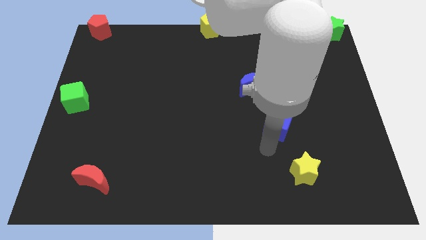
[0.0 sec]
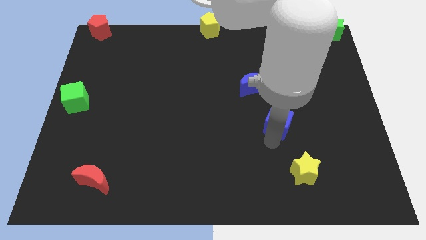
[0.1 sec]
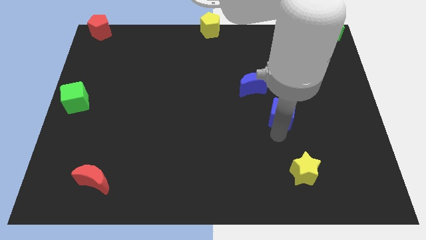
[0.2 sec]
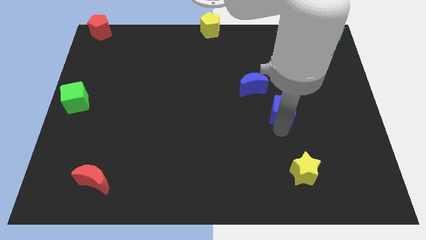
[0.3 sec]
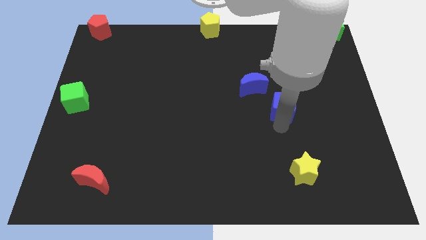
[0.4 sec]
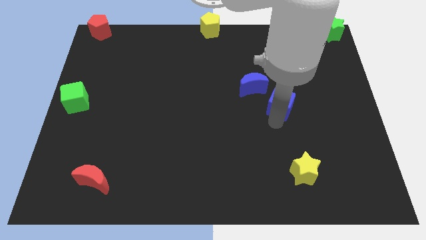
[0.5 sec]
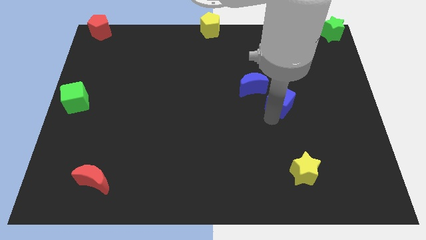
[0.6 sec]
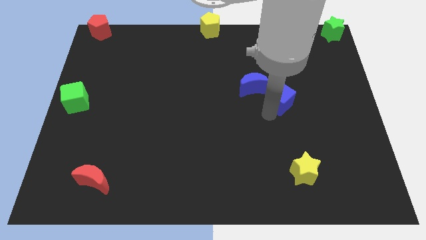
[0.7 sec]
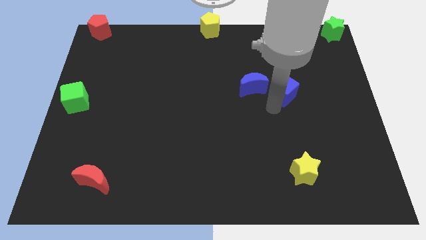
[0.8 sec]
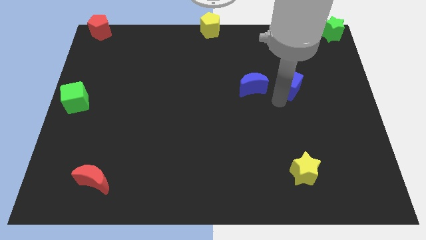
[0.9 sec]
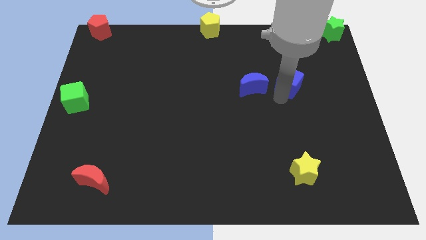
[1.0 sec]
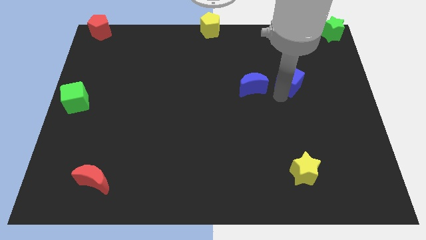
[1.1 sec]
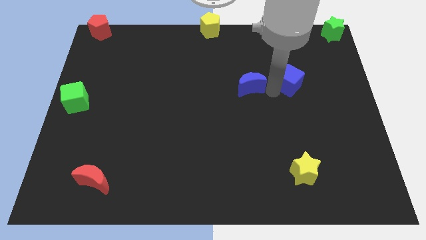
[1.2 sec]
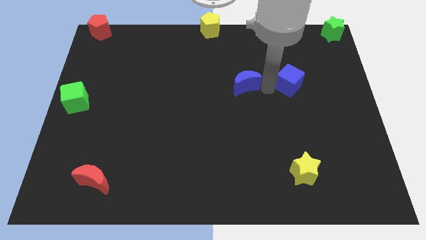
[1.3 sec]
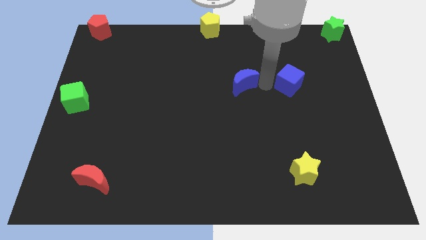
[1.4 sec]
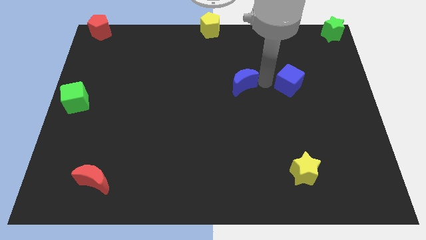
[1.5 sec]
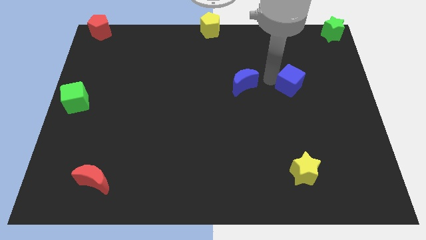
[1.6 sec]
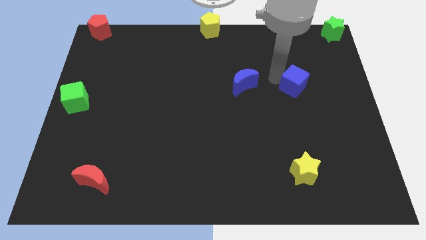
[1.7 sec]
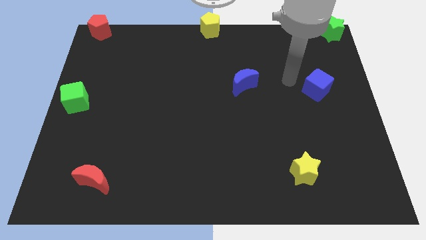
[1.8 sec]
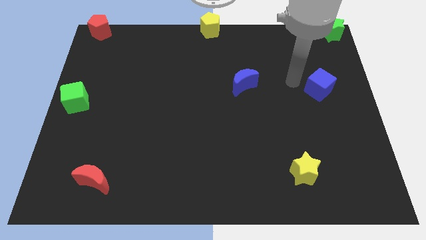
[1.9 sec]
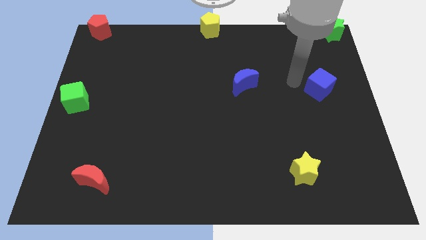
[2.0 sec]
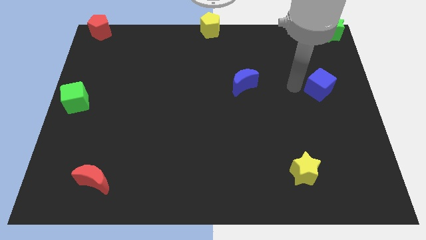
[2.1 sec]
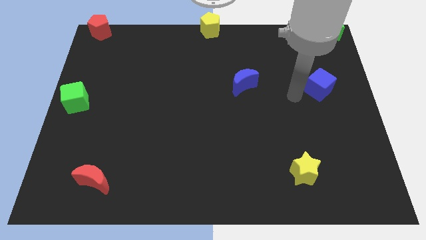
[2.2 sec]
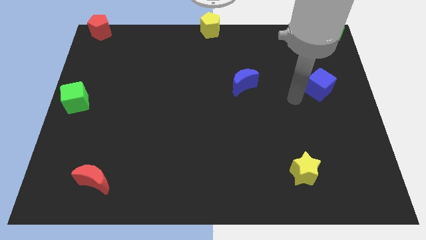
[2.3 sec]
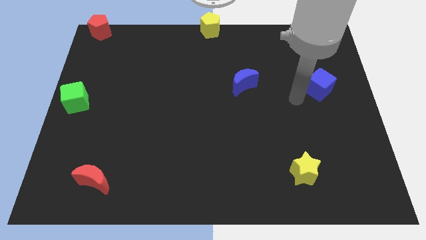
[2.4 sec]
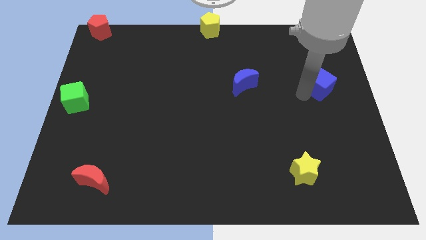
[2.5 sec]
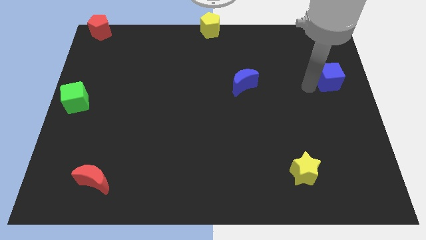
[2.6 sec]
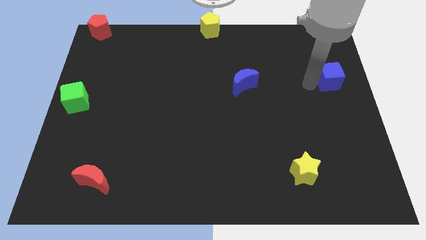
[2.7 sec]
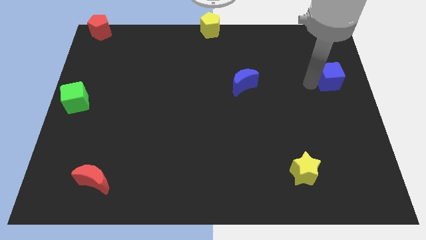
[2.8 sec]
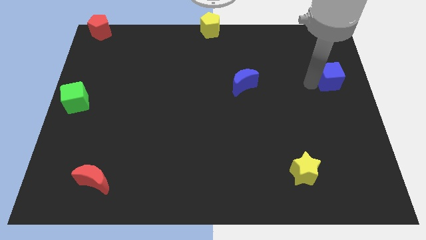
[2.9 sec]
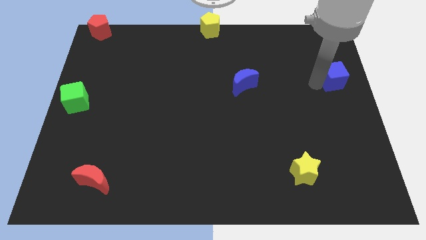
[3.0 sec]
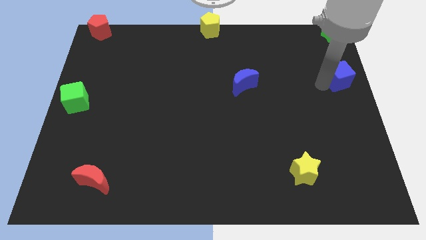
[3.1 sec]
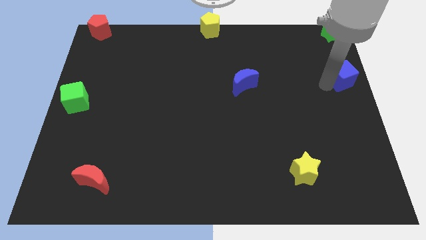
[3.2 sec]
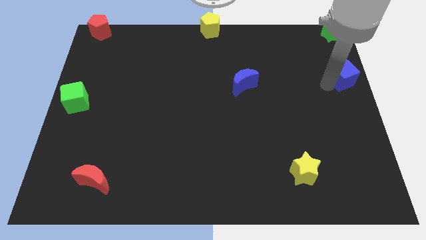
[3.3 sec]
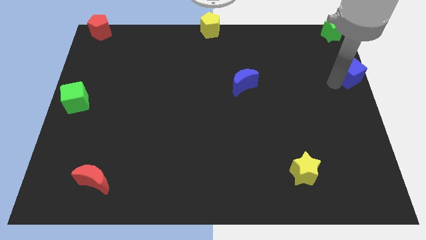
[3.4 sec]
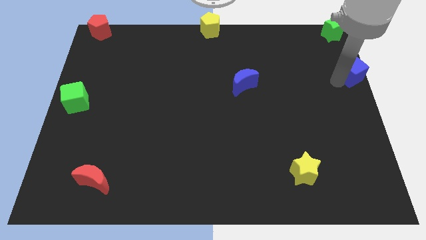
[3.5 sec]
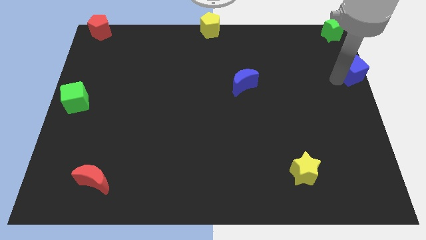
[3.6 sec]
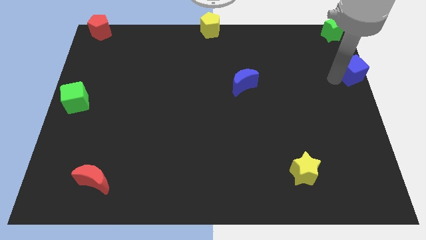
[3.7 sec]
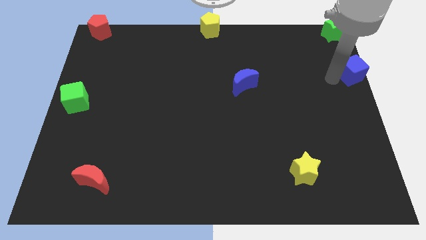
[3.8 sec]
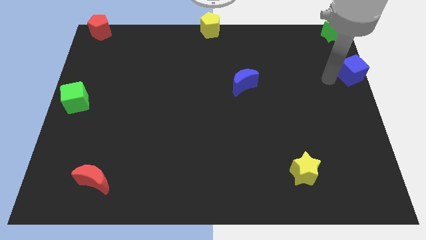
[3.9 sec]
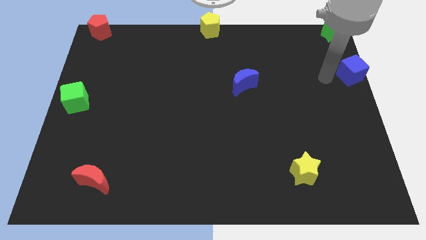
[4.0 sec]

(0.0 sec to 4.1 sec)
push the blue cube towards the top right corner of the board

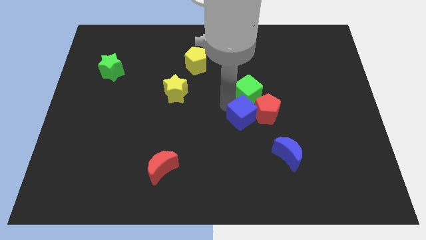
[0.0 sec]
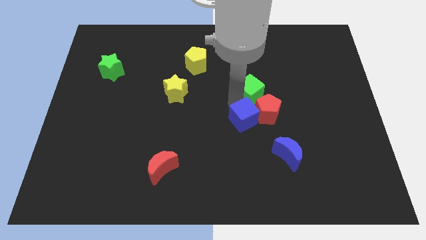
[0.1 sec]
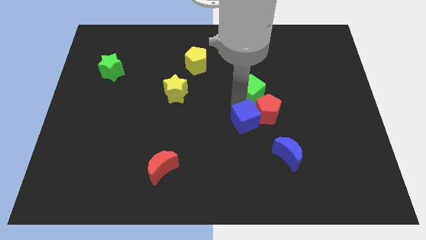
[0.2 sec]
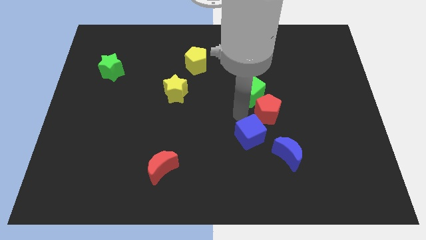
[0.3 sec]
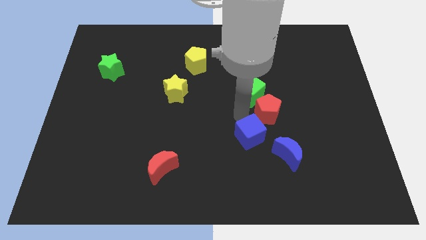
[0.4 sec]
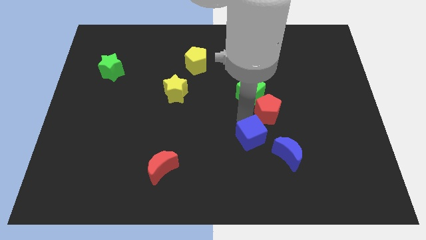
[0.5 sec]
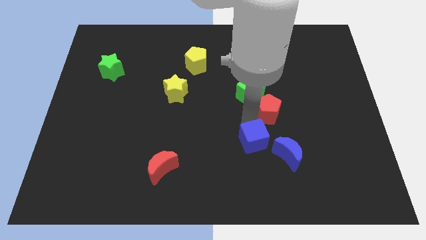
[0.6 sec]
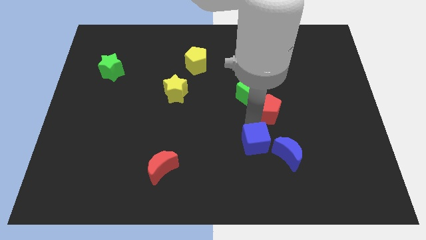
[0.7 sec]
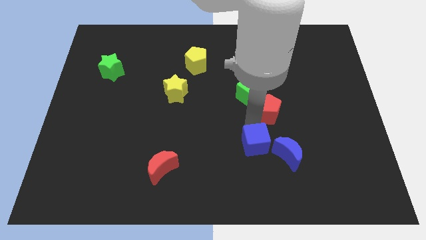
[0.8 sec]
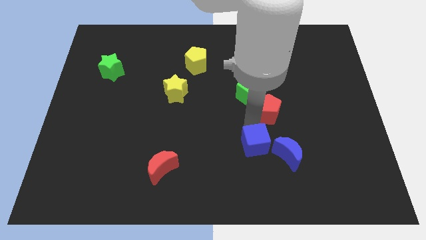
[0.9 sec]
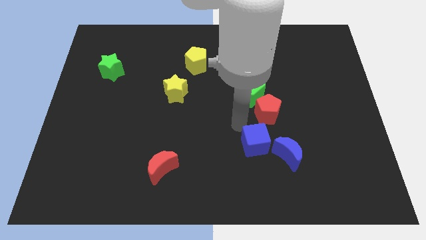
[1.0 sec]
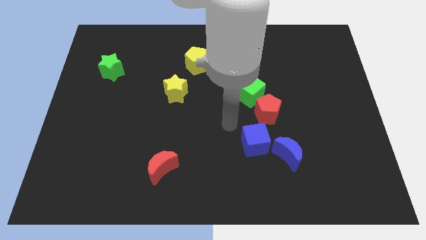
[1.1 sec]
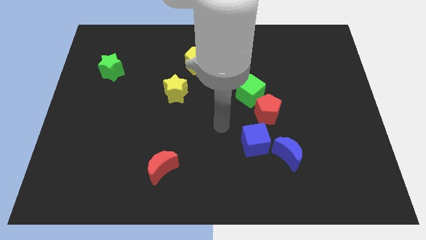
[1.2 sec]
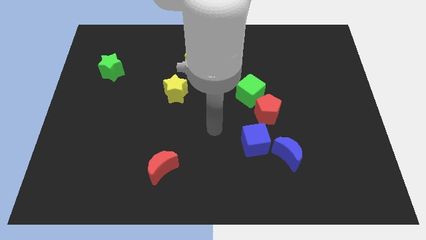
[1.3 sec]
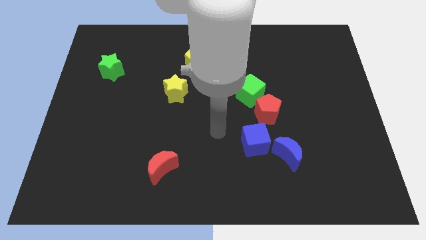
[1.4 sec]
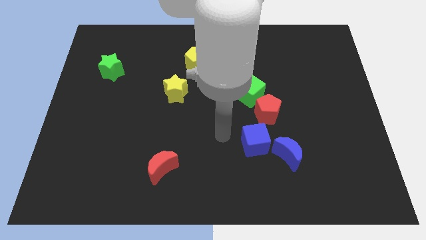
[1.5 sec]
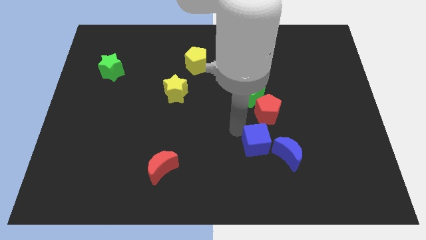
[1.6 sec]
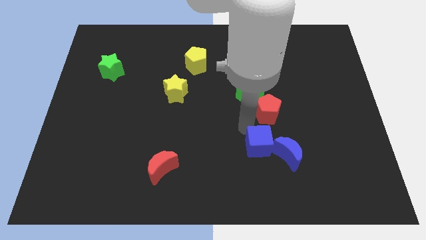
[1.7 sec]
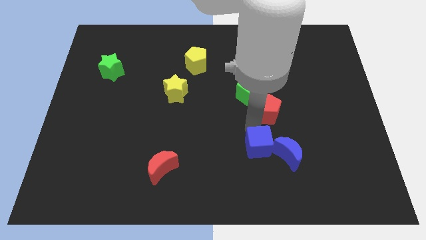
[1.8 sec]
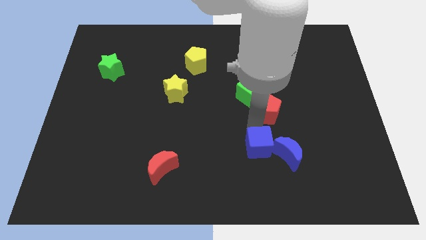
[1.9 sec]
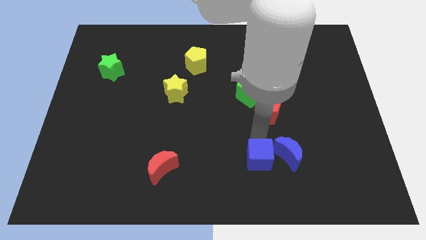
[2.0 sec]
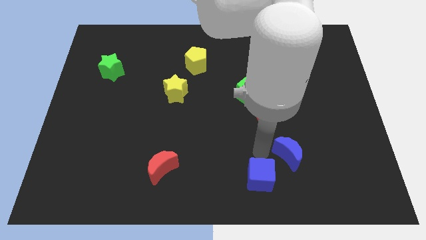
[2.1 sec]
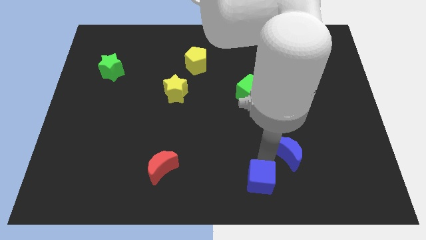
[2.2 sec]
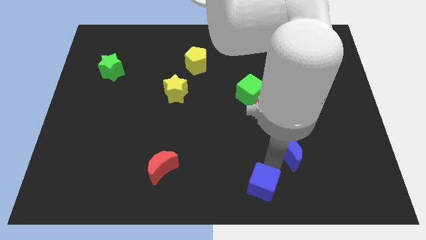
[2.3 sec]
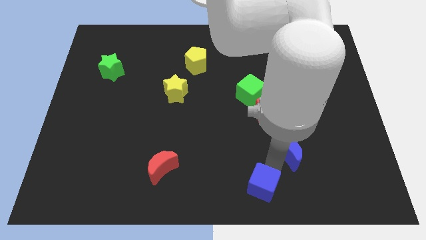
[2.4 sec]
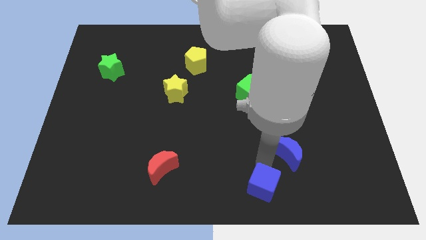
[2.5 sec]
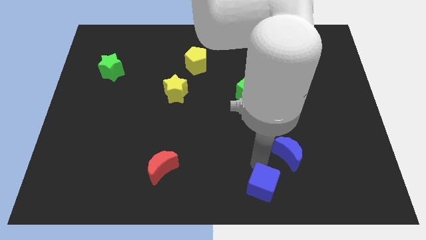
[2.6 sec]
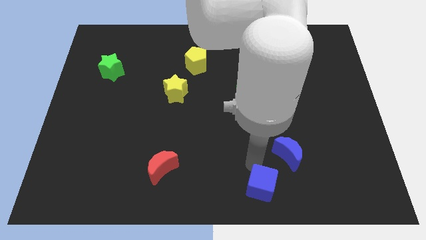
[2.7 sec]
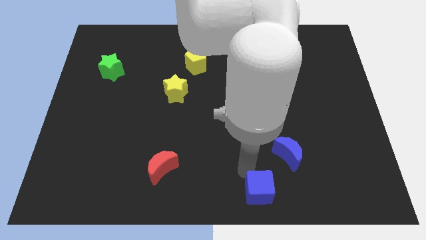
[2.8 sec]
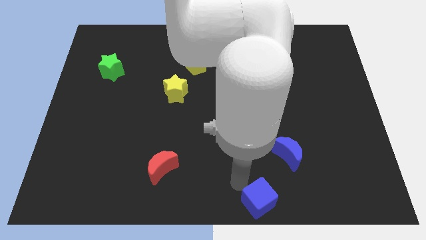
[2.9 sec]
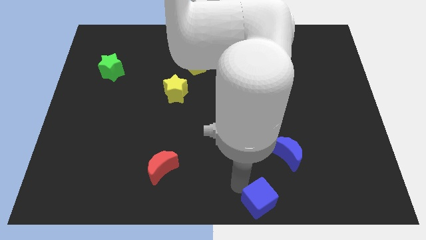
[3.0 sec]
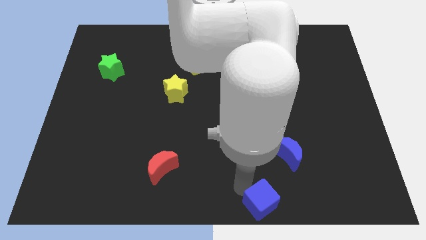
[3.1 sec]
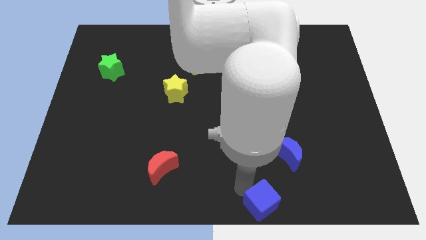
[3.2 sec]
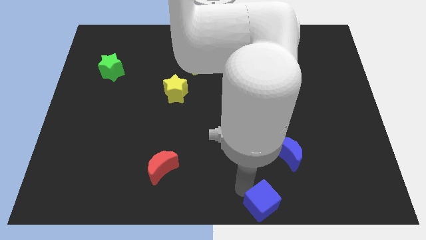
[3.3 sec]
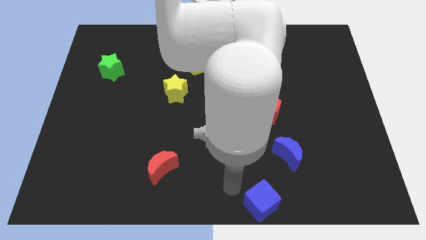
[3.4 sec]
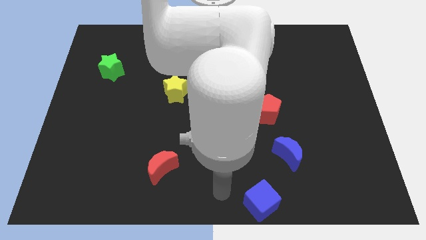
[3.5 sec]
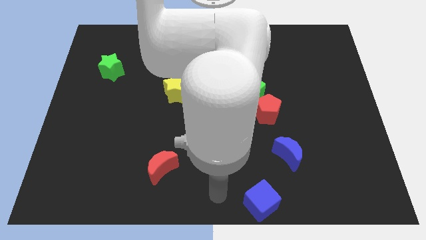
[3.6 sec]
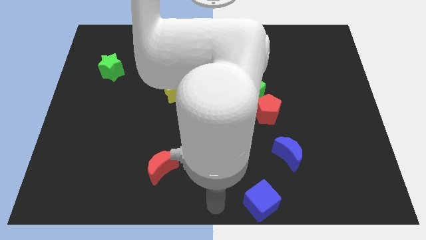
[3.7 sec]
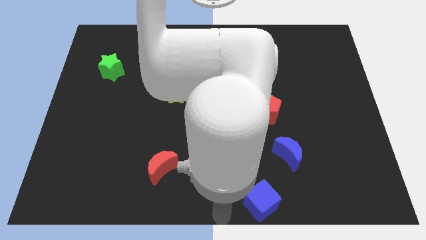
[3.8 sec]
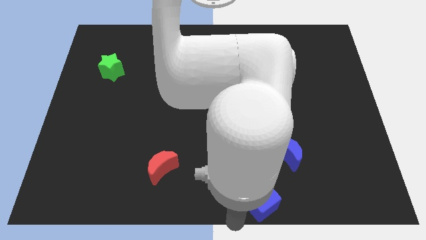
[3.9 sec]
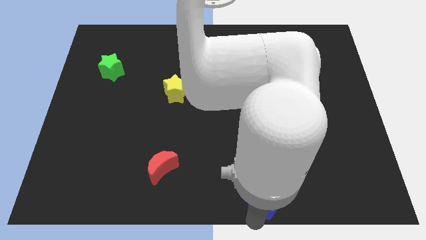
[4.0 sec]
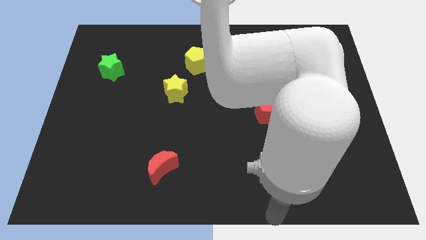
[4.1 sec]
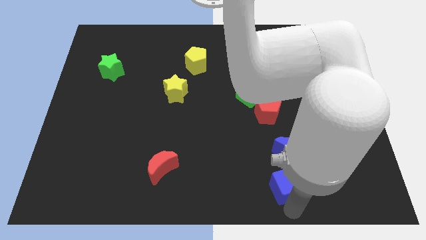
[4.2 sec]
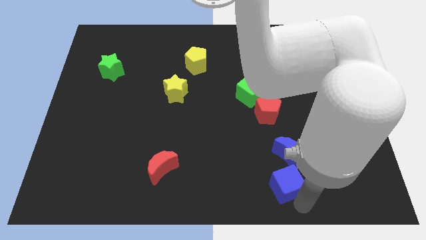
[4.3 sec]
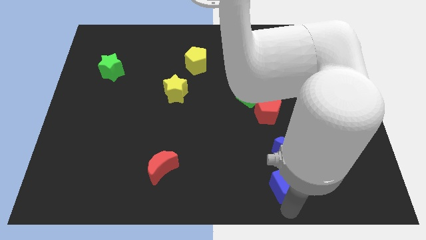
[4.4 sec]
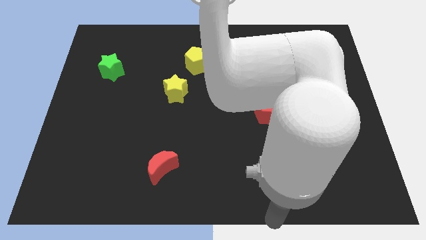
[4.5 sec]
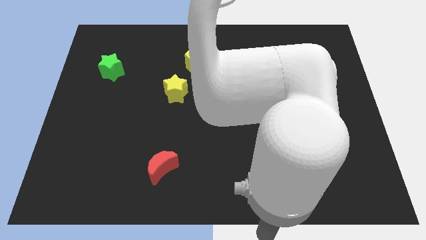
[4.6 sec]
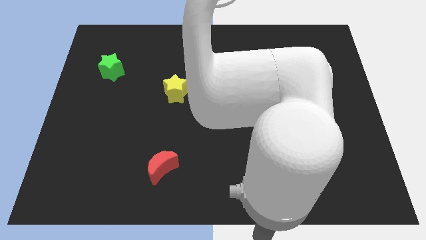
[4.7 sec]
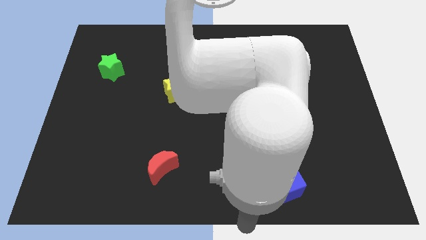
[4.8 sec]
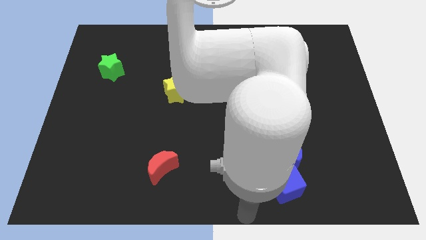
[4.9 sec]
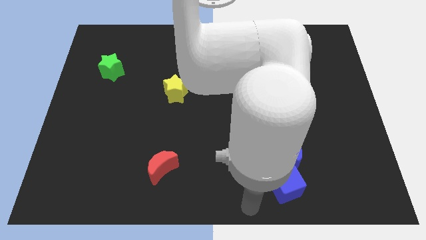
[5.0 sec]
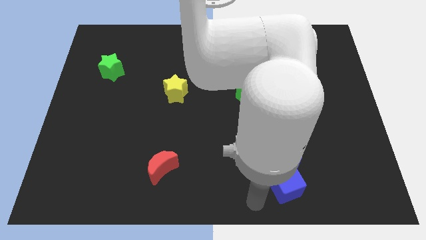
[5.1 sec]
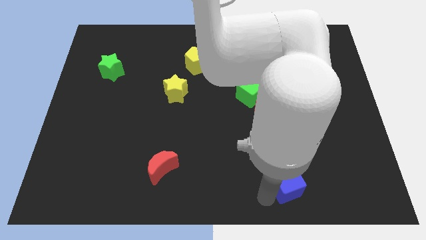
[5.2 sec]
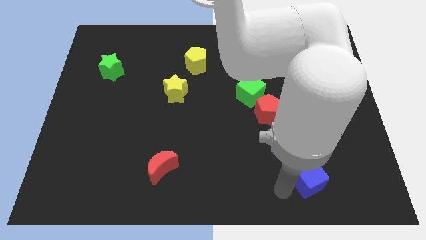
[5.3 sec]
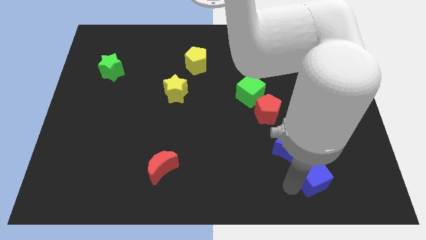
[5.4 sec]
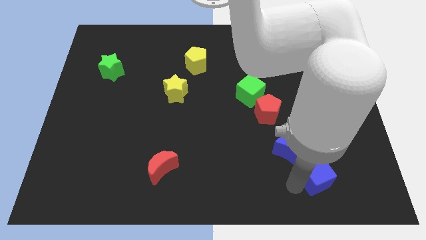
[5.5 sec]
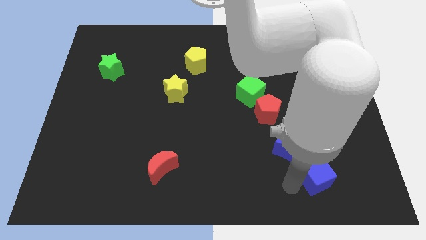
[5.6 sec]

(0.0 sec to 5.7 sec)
push the blue cube into the blue moon
